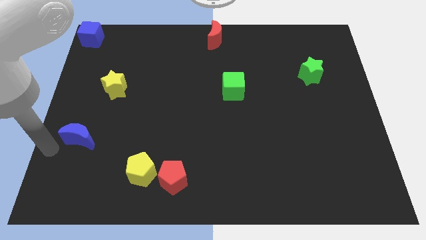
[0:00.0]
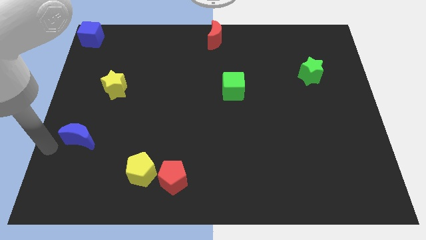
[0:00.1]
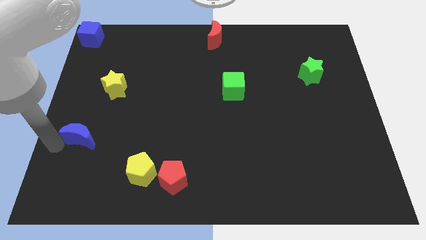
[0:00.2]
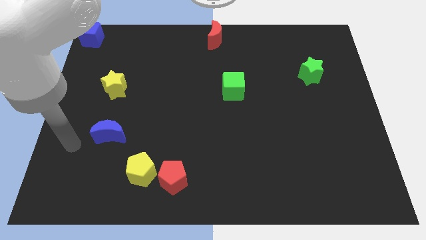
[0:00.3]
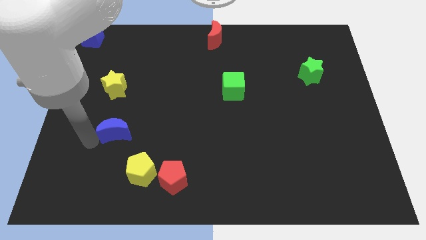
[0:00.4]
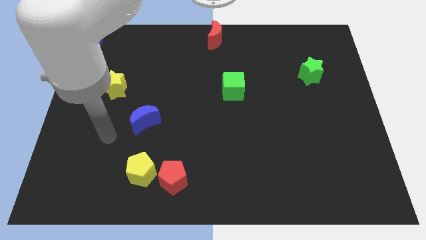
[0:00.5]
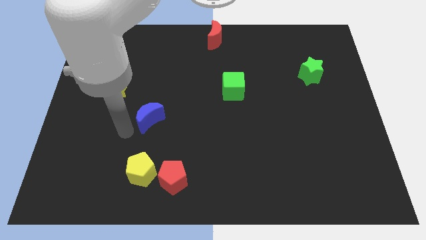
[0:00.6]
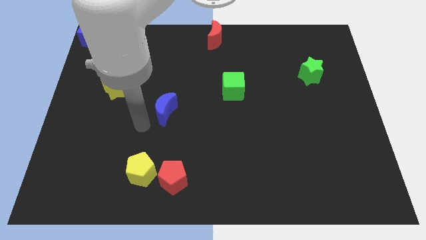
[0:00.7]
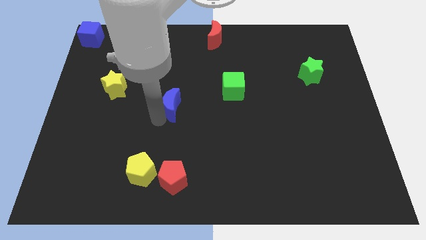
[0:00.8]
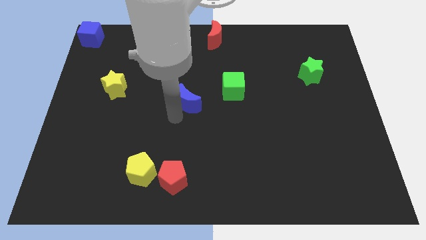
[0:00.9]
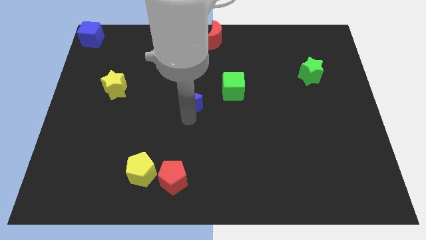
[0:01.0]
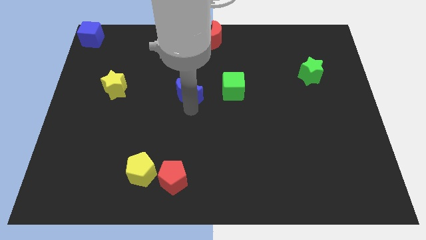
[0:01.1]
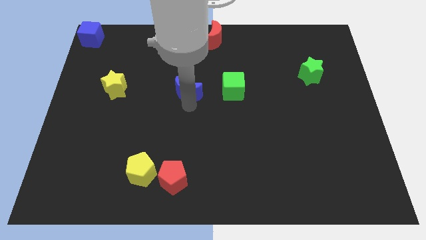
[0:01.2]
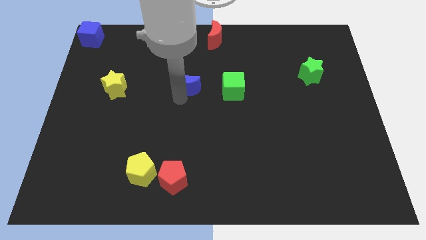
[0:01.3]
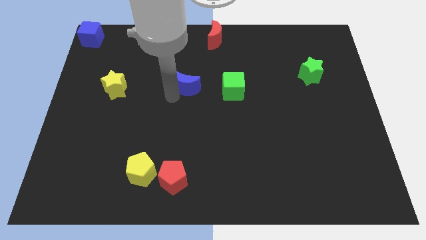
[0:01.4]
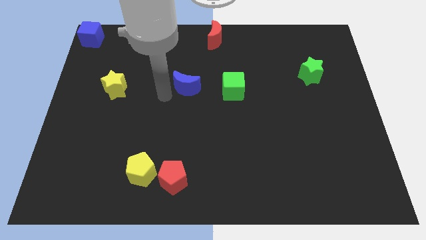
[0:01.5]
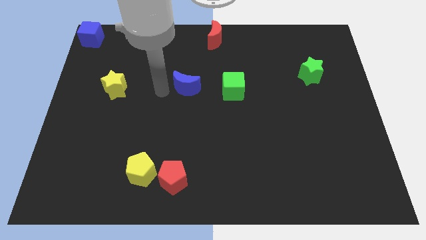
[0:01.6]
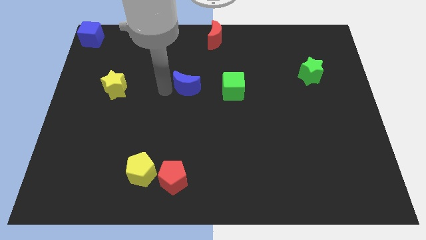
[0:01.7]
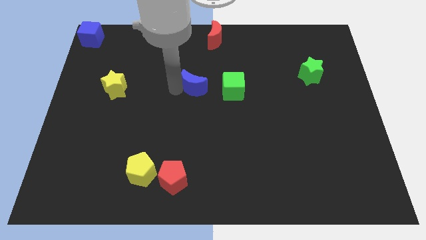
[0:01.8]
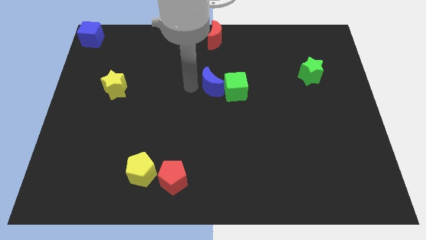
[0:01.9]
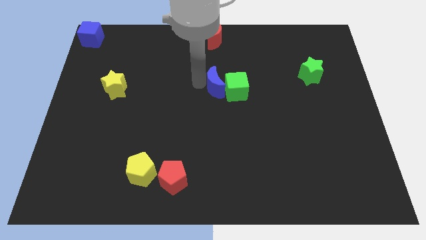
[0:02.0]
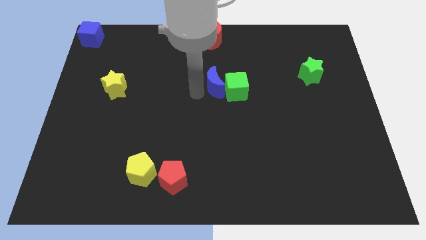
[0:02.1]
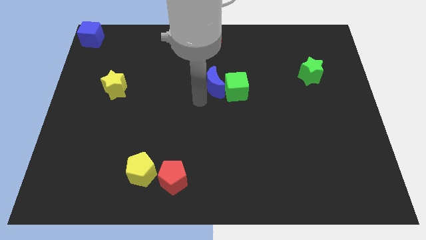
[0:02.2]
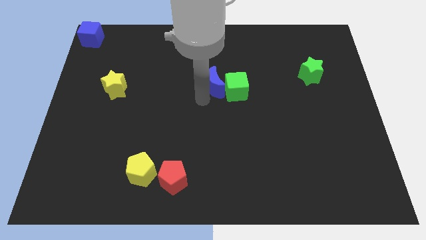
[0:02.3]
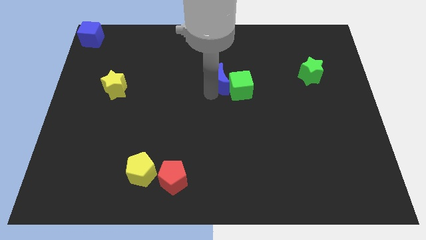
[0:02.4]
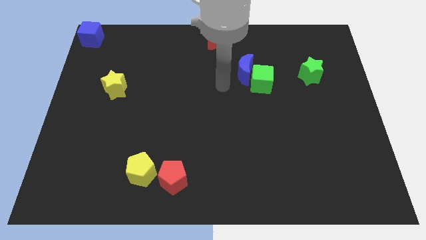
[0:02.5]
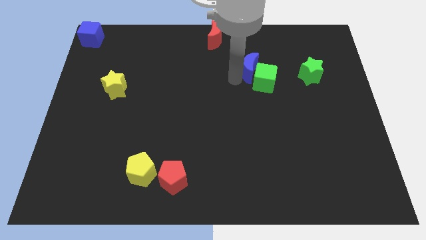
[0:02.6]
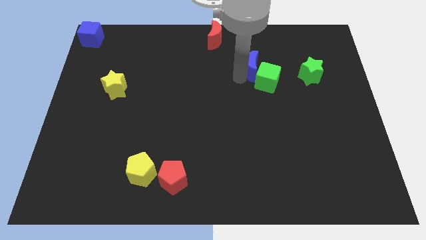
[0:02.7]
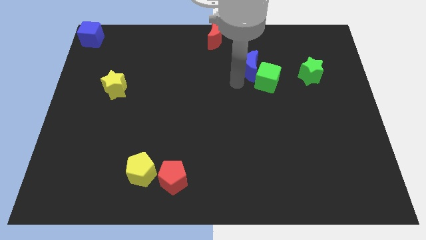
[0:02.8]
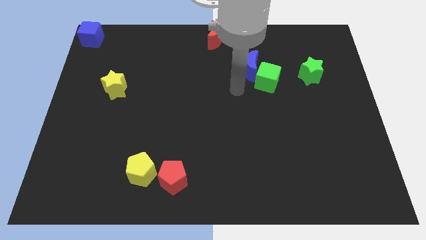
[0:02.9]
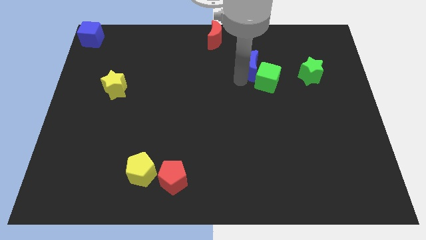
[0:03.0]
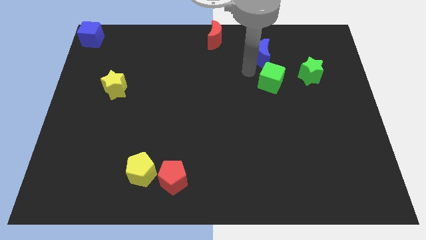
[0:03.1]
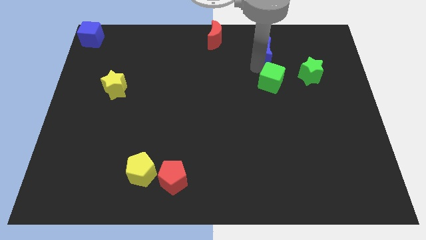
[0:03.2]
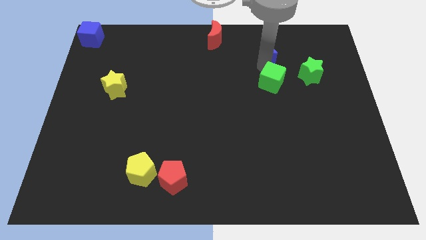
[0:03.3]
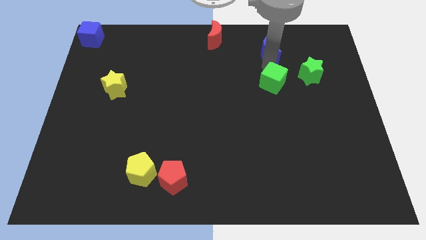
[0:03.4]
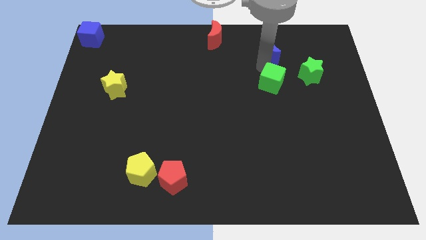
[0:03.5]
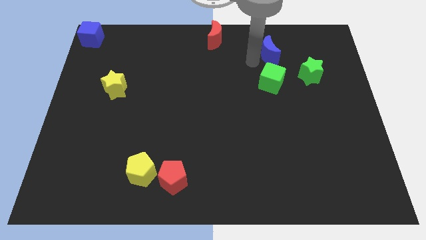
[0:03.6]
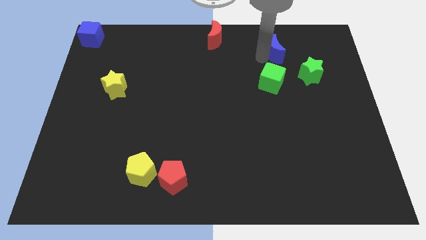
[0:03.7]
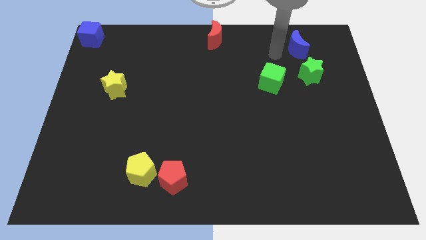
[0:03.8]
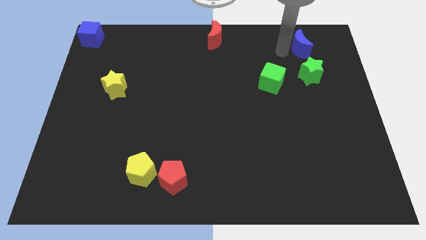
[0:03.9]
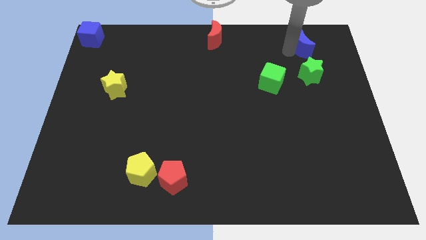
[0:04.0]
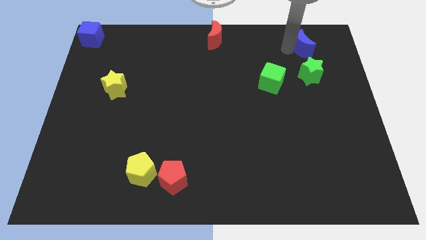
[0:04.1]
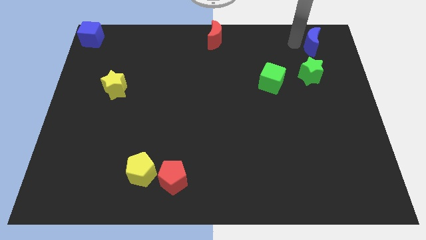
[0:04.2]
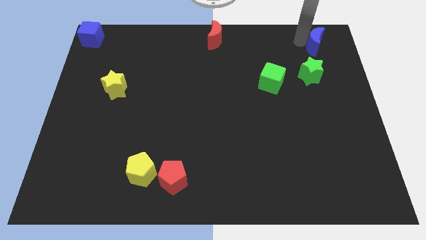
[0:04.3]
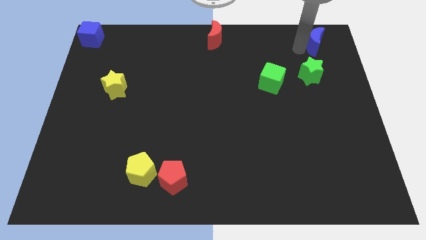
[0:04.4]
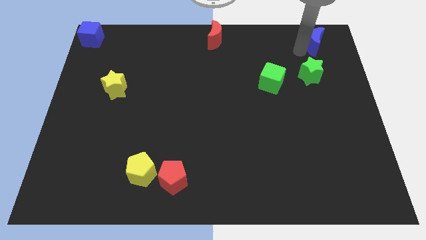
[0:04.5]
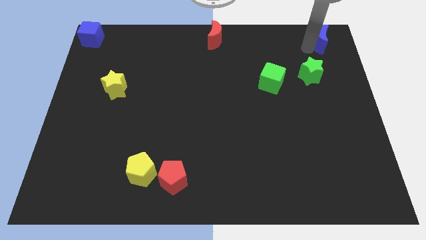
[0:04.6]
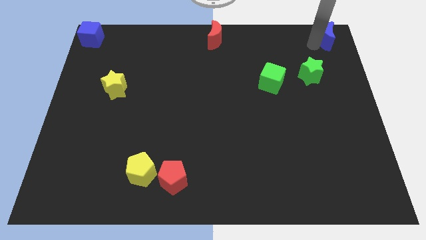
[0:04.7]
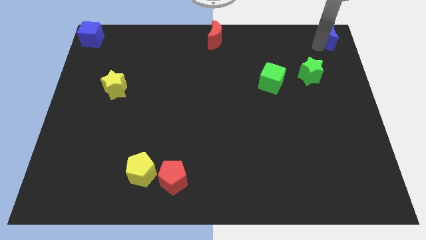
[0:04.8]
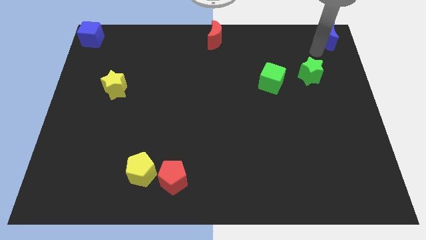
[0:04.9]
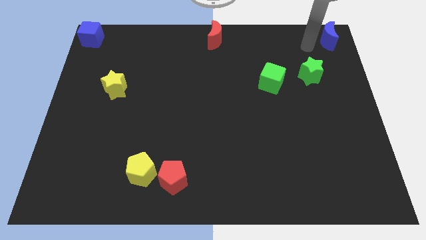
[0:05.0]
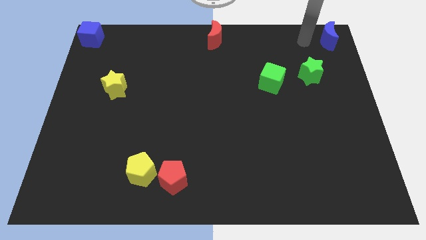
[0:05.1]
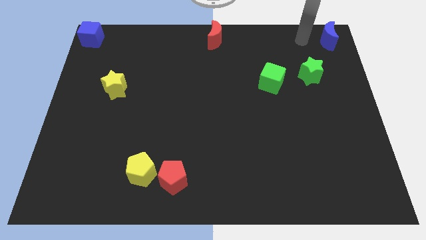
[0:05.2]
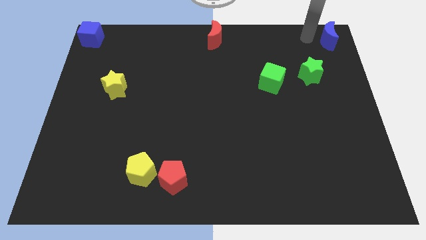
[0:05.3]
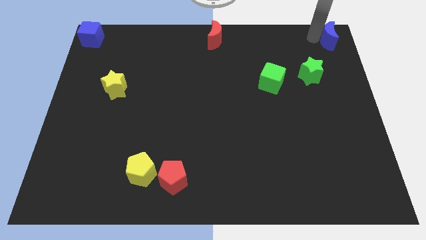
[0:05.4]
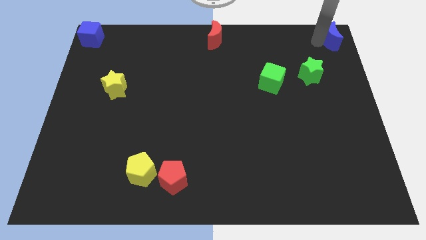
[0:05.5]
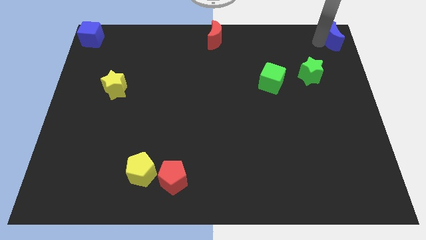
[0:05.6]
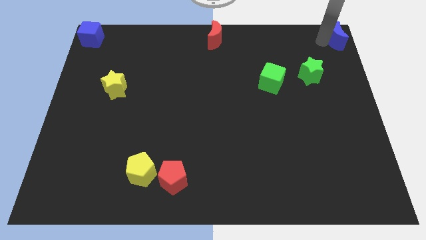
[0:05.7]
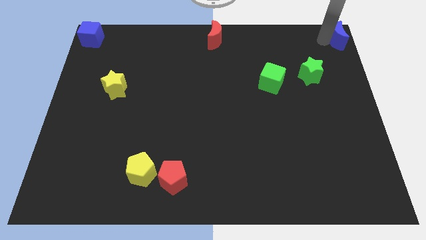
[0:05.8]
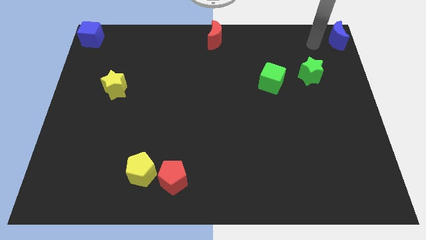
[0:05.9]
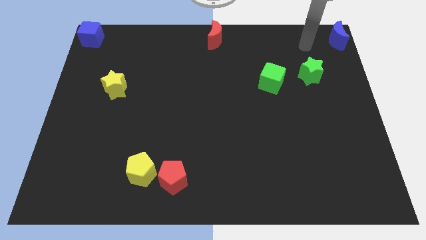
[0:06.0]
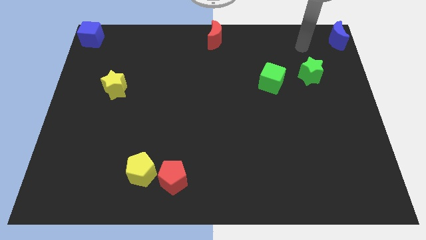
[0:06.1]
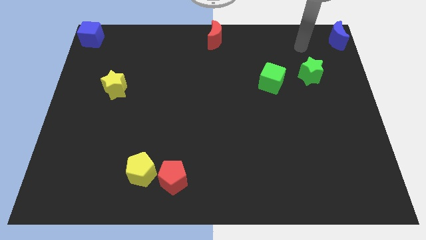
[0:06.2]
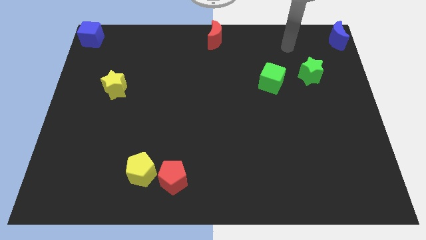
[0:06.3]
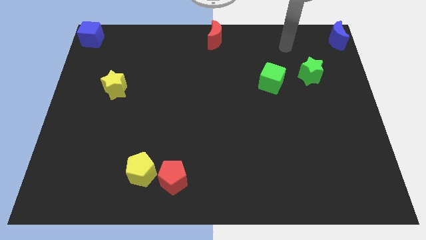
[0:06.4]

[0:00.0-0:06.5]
place the blue moon at the top right corner of the board

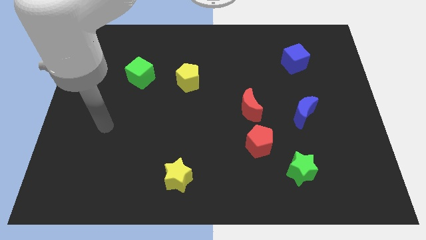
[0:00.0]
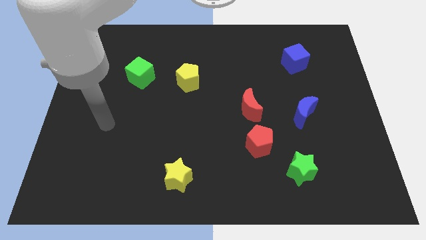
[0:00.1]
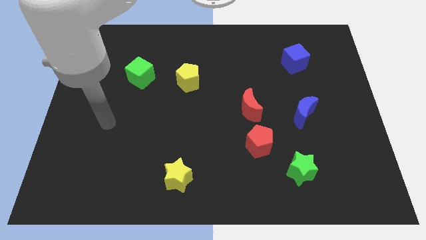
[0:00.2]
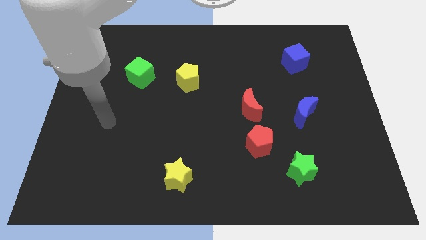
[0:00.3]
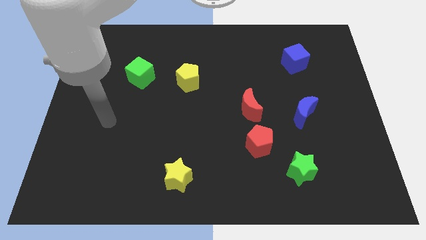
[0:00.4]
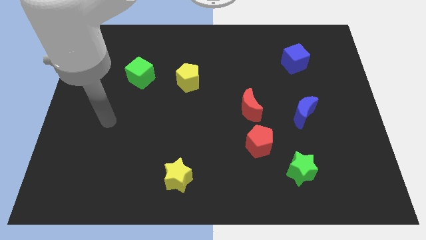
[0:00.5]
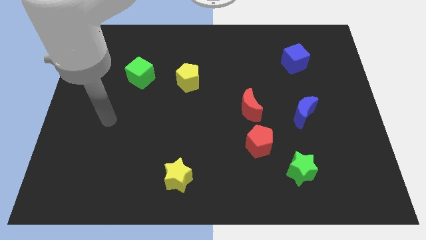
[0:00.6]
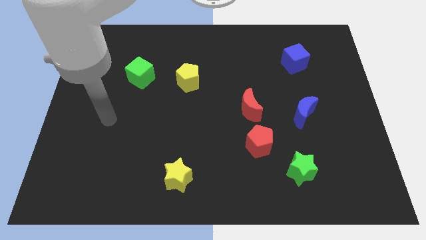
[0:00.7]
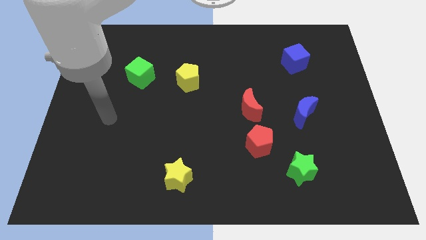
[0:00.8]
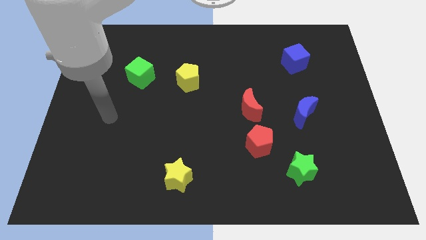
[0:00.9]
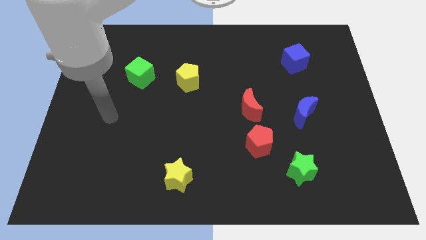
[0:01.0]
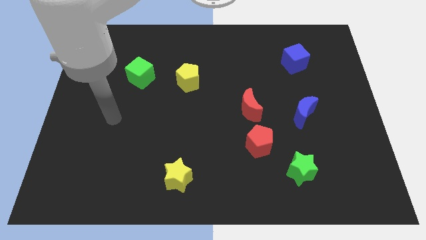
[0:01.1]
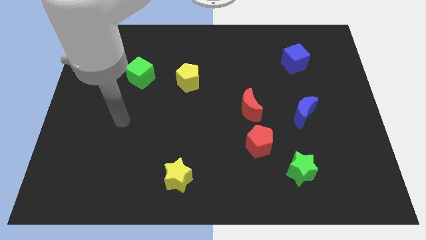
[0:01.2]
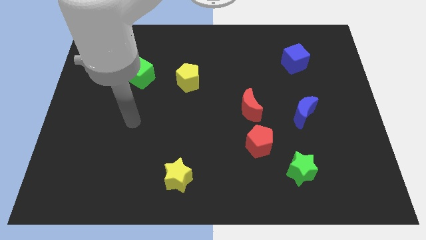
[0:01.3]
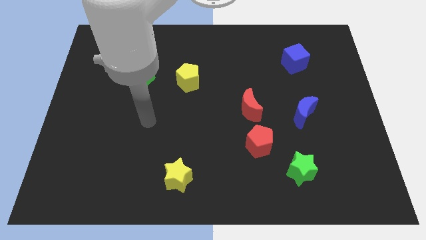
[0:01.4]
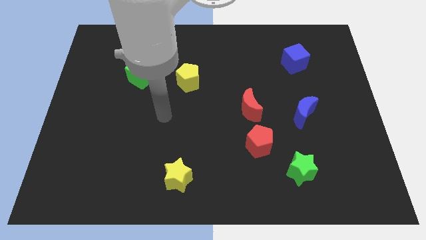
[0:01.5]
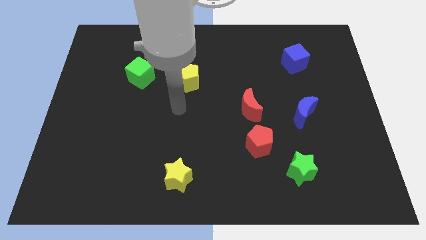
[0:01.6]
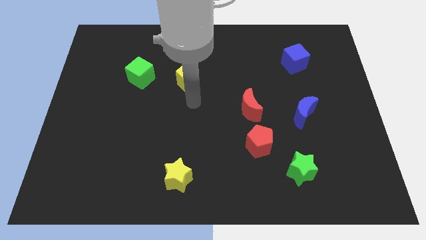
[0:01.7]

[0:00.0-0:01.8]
point your arm at the bottom of the yellow pentagon

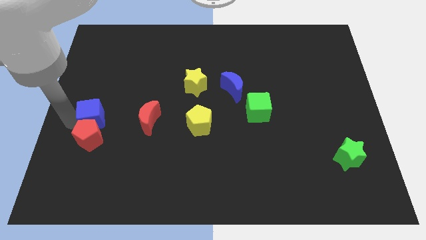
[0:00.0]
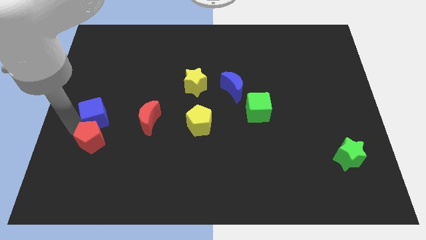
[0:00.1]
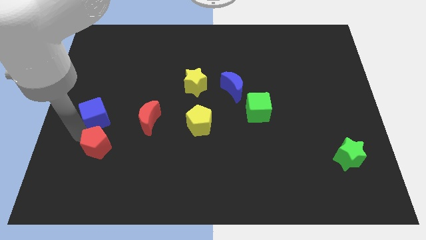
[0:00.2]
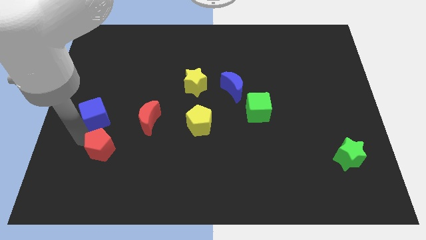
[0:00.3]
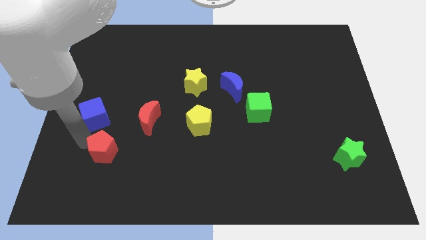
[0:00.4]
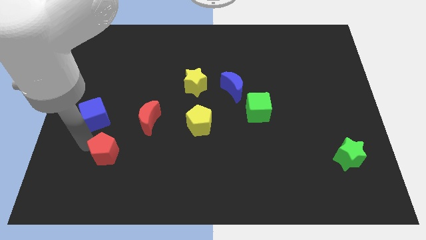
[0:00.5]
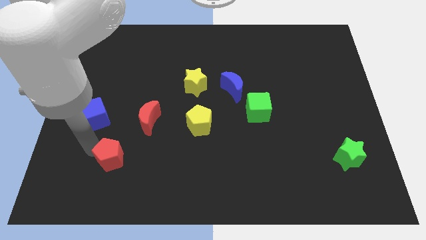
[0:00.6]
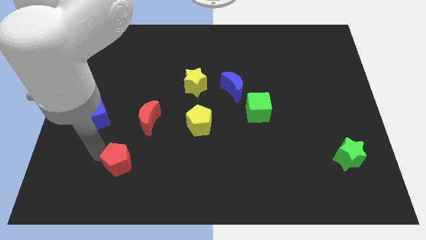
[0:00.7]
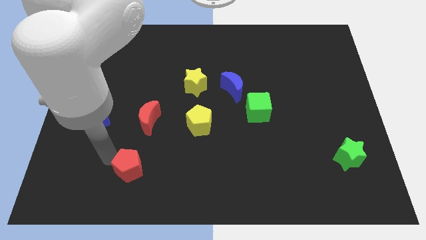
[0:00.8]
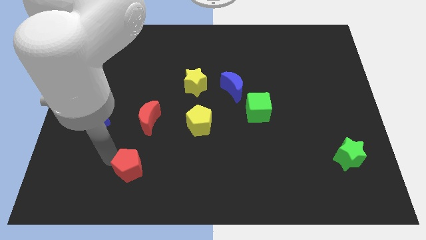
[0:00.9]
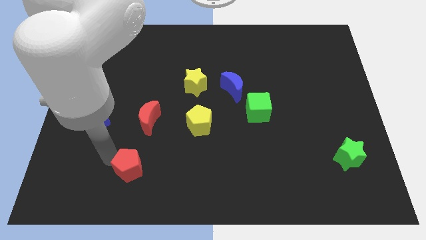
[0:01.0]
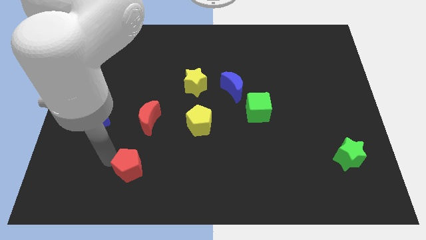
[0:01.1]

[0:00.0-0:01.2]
place the red pentagon below the red moon
